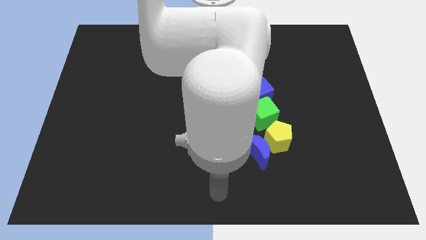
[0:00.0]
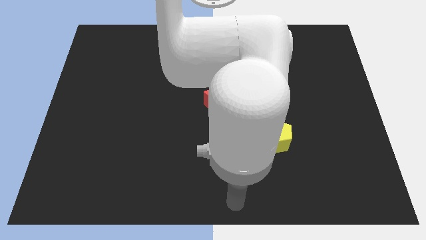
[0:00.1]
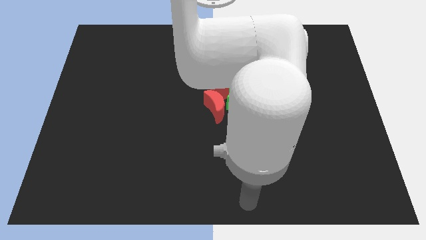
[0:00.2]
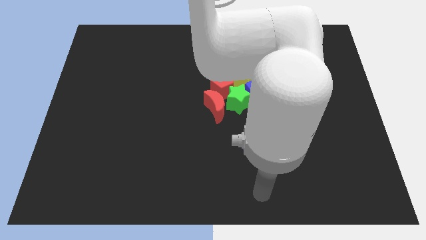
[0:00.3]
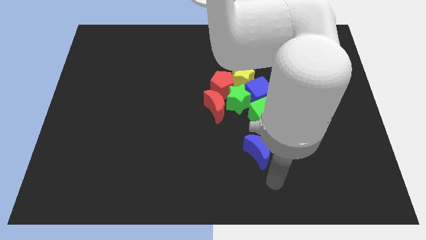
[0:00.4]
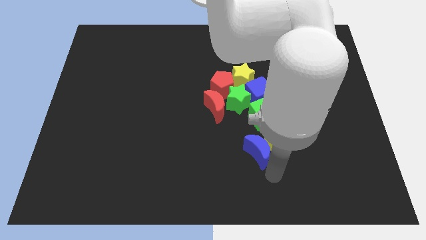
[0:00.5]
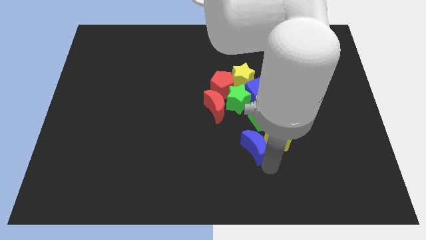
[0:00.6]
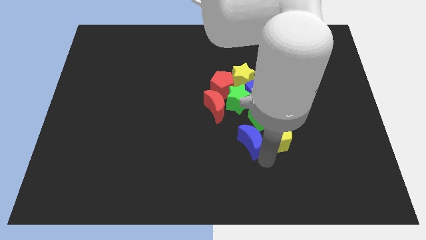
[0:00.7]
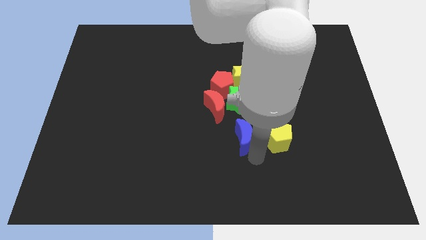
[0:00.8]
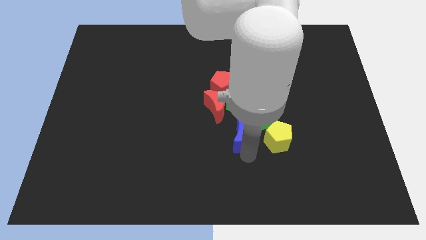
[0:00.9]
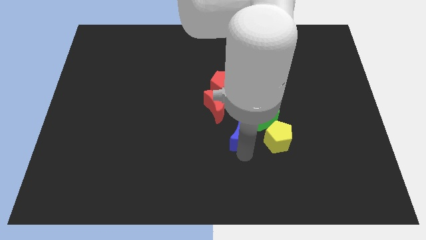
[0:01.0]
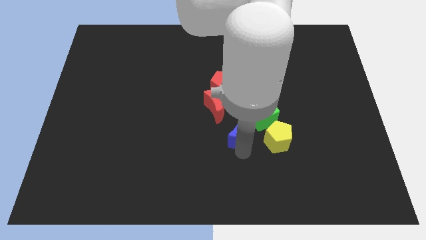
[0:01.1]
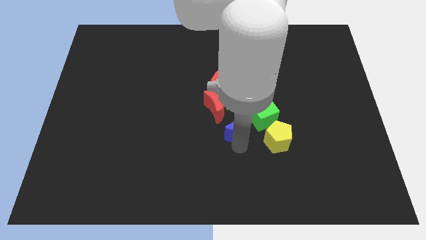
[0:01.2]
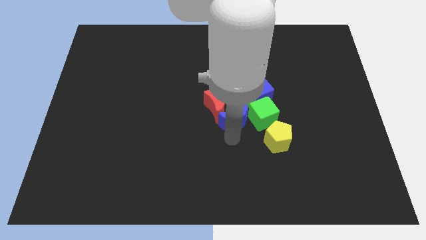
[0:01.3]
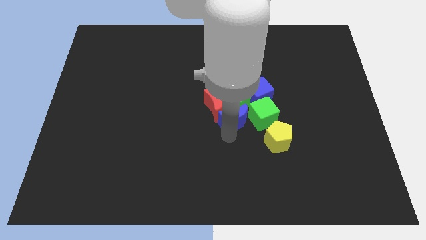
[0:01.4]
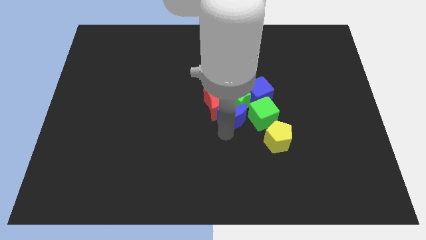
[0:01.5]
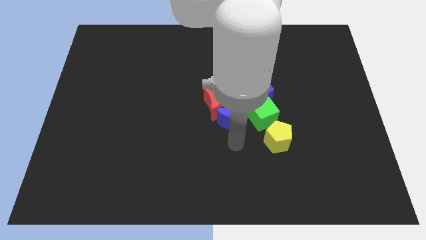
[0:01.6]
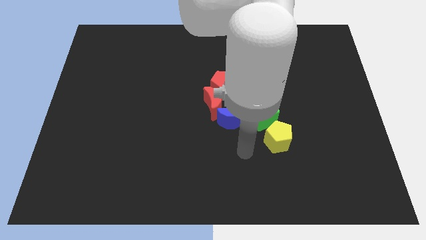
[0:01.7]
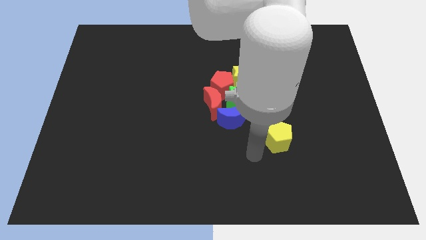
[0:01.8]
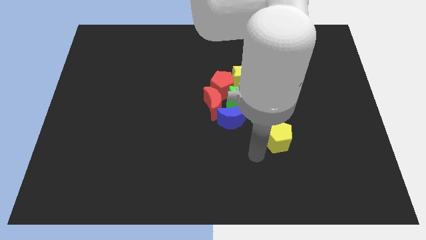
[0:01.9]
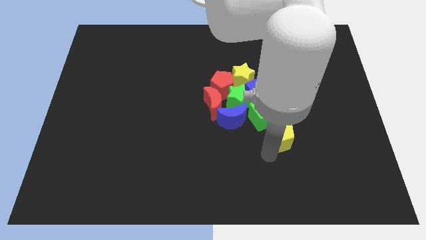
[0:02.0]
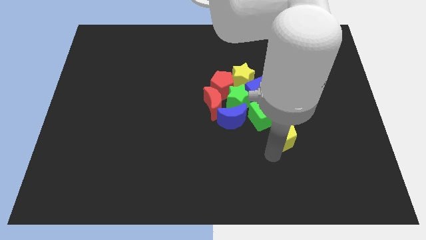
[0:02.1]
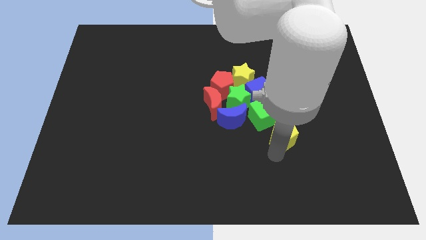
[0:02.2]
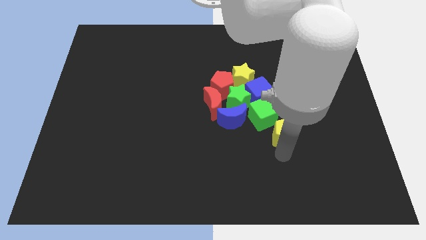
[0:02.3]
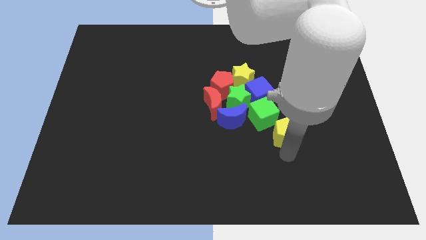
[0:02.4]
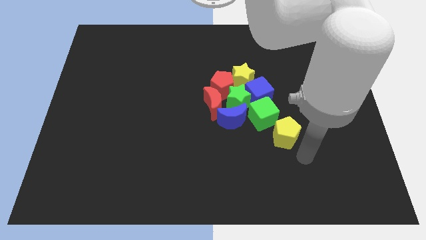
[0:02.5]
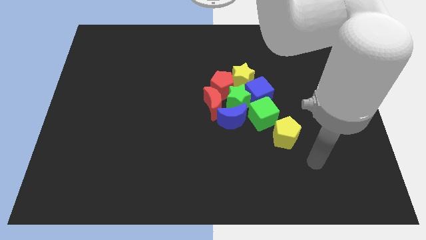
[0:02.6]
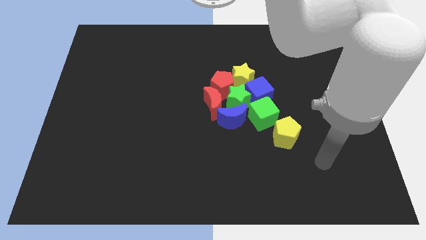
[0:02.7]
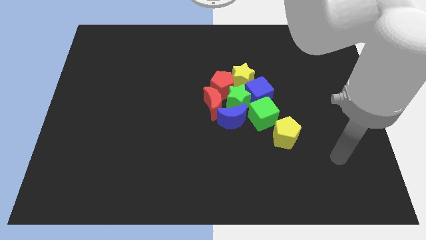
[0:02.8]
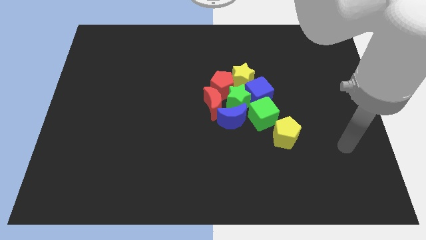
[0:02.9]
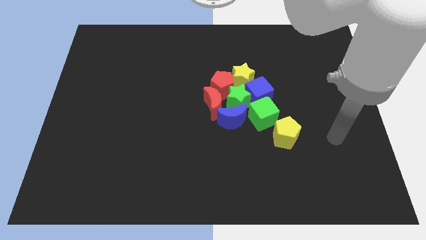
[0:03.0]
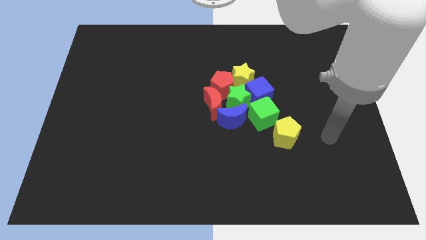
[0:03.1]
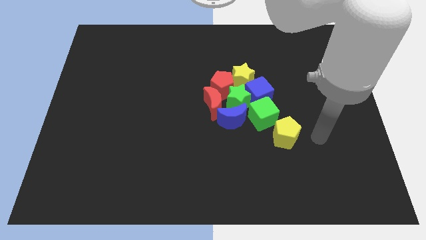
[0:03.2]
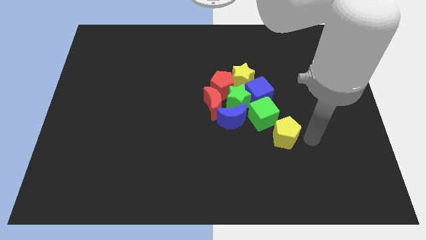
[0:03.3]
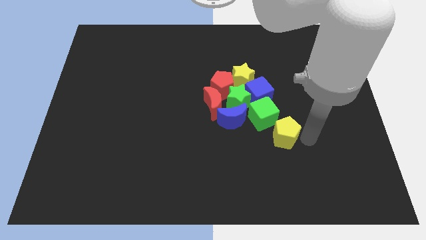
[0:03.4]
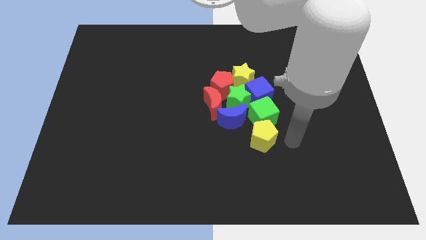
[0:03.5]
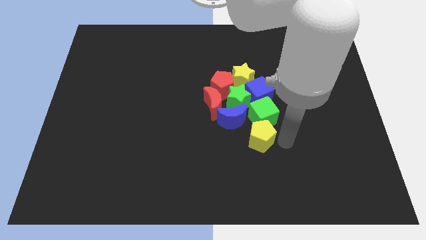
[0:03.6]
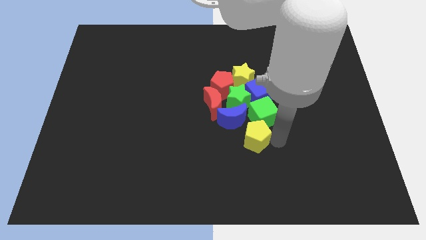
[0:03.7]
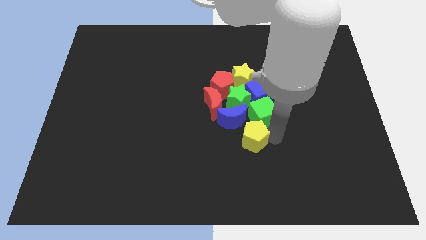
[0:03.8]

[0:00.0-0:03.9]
push the blue crescent into the red crescent

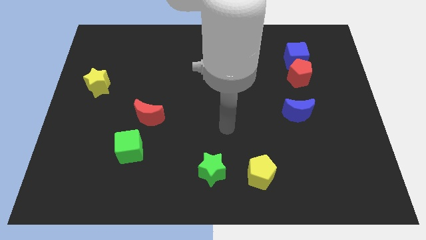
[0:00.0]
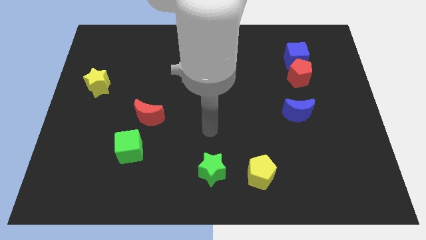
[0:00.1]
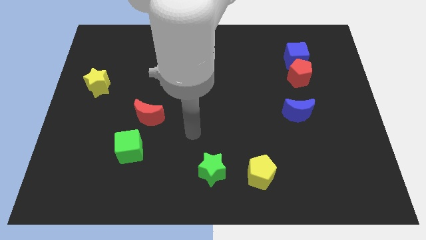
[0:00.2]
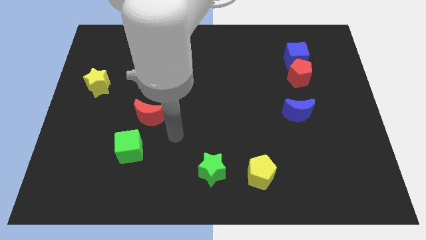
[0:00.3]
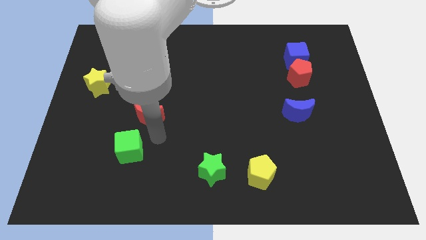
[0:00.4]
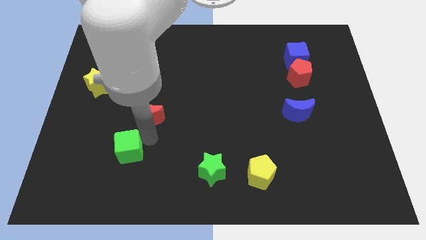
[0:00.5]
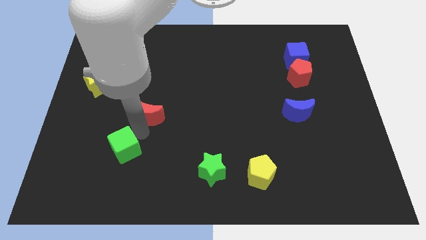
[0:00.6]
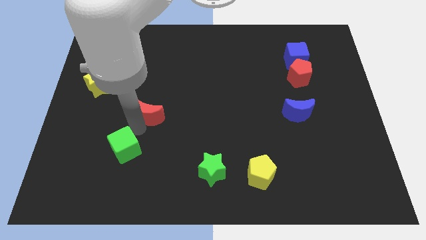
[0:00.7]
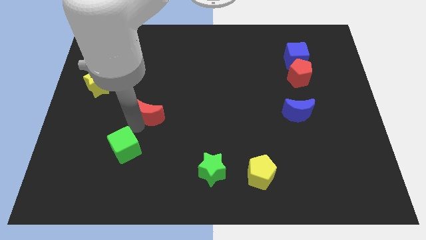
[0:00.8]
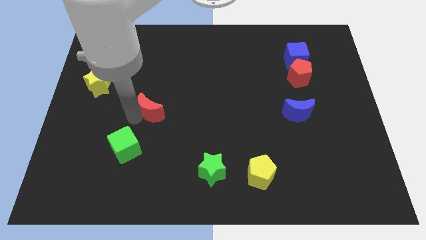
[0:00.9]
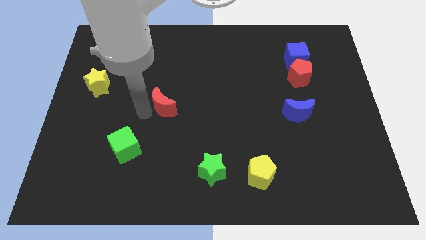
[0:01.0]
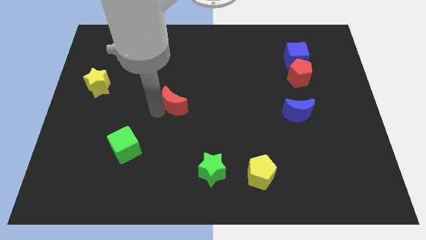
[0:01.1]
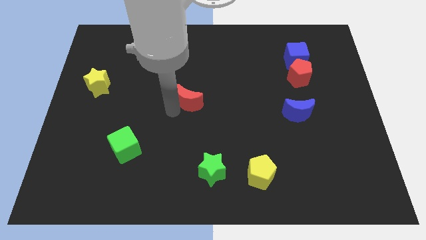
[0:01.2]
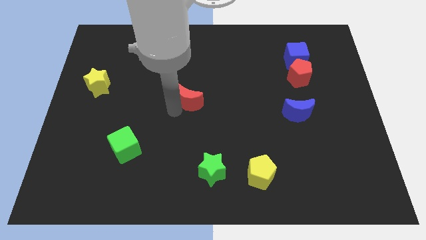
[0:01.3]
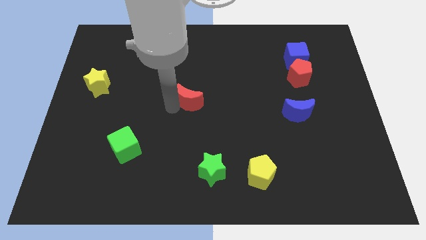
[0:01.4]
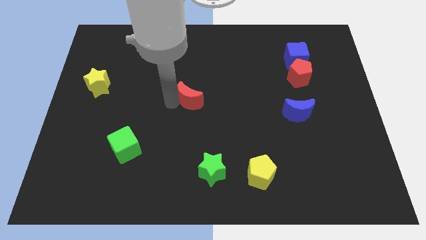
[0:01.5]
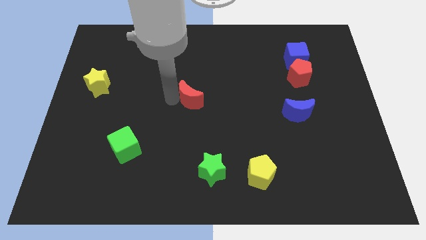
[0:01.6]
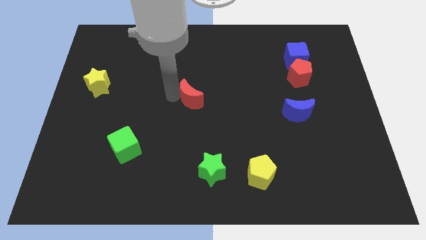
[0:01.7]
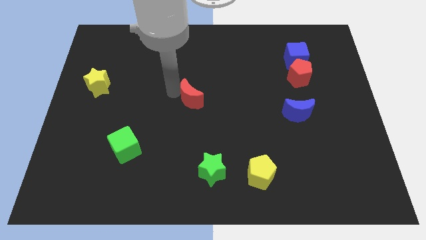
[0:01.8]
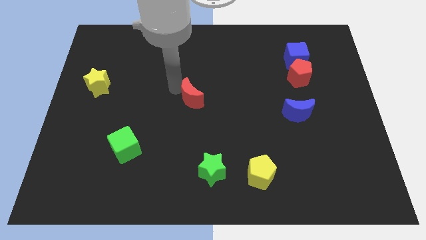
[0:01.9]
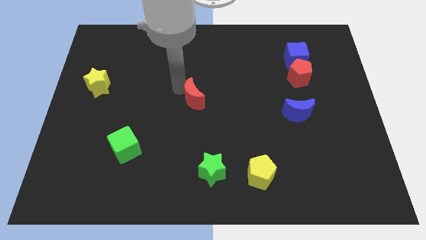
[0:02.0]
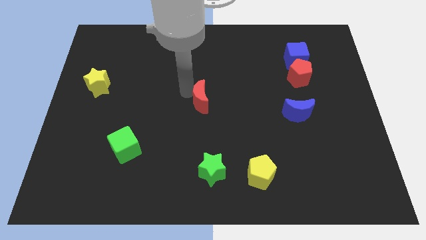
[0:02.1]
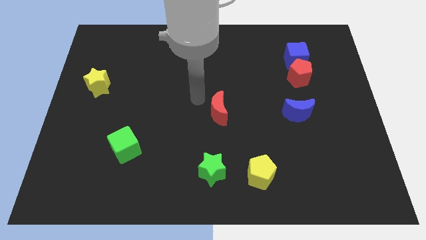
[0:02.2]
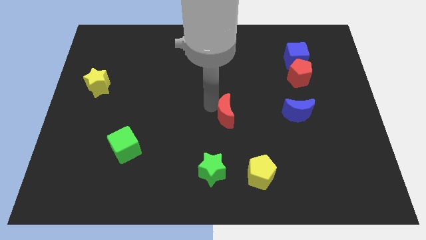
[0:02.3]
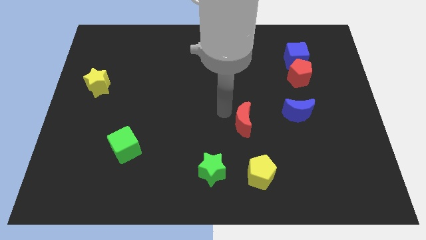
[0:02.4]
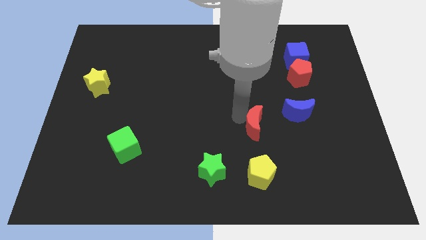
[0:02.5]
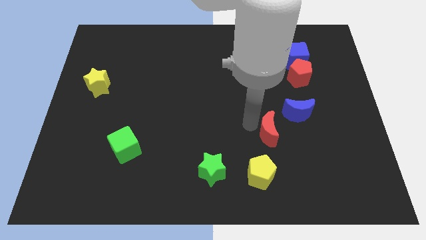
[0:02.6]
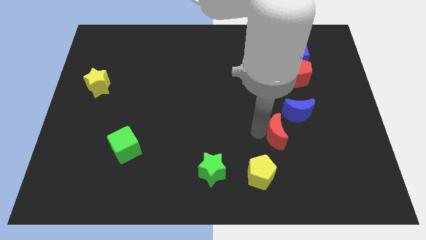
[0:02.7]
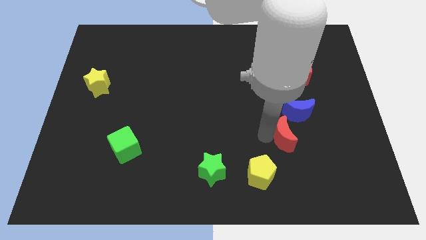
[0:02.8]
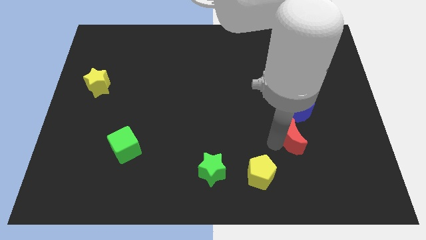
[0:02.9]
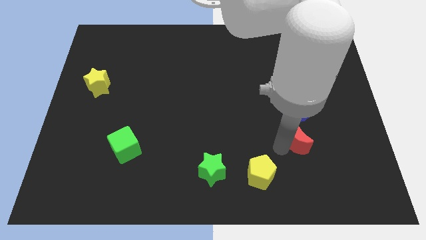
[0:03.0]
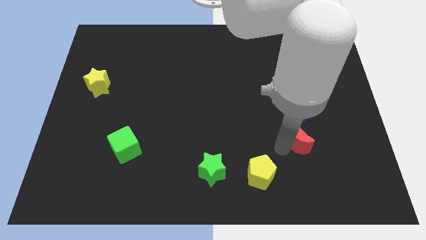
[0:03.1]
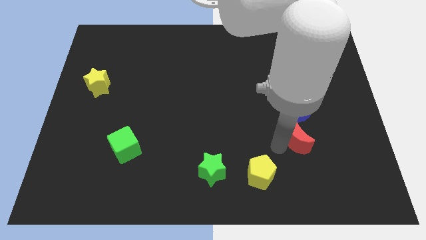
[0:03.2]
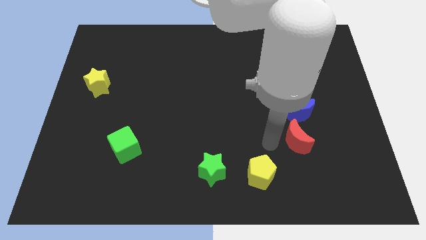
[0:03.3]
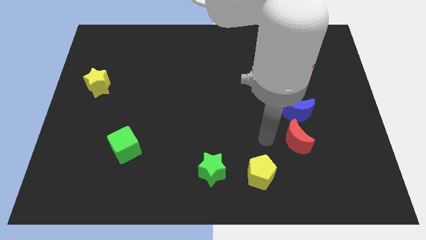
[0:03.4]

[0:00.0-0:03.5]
place the red crescent below the blue moon

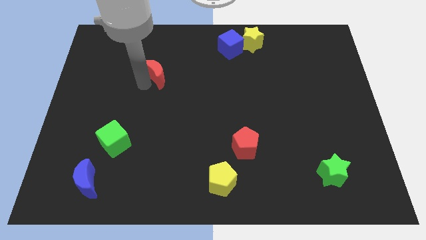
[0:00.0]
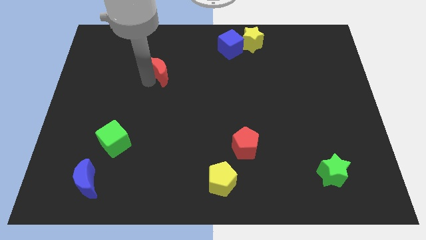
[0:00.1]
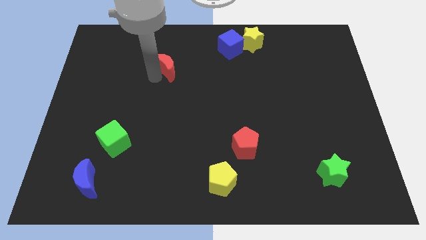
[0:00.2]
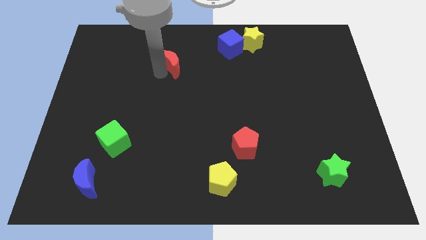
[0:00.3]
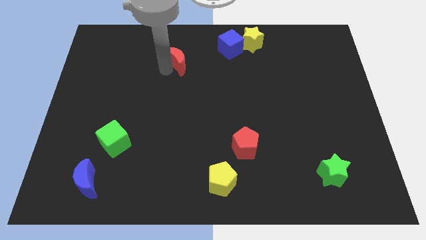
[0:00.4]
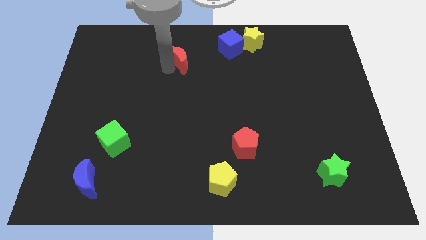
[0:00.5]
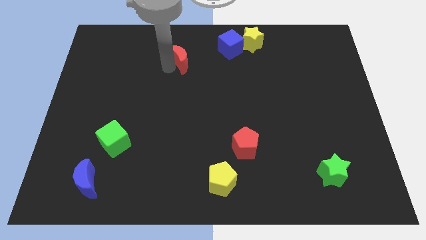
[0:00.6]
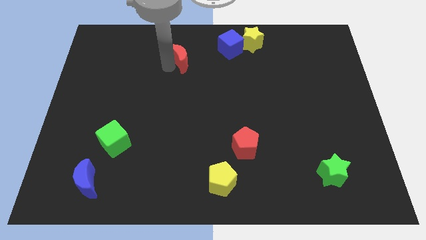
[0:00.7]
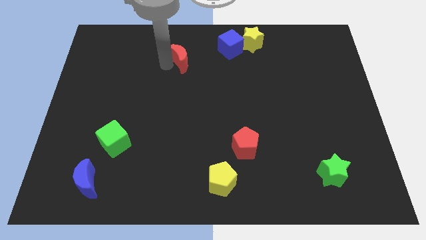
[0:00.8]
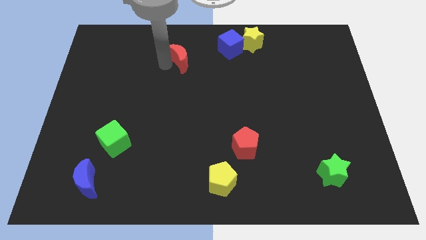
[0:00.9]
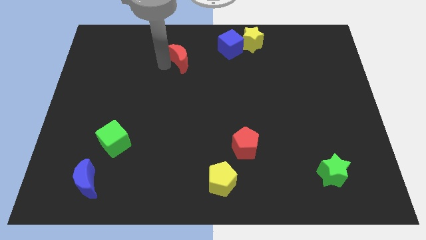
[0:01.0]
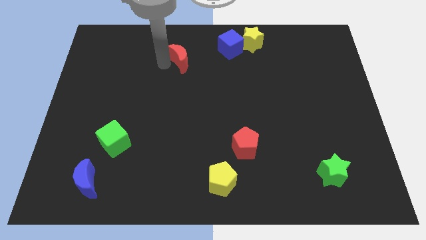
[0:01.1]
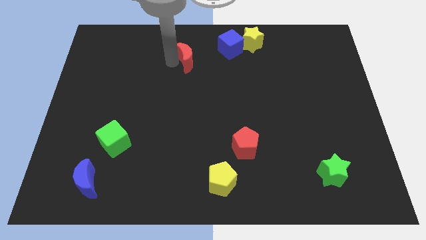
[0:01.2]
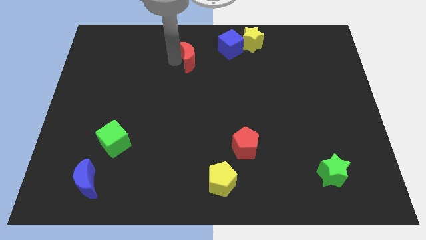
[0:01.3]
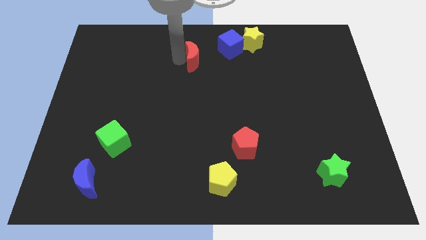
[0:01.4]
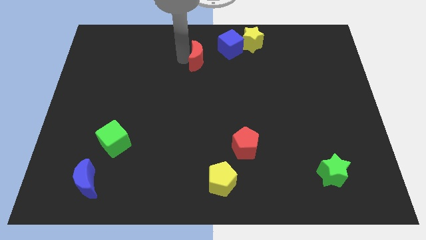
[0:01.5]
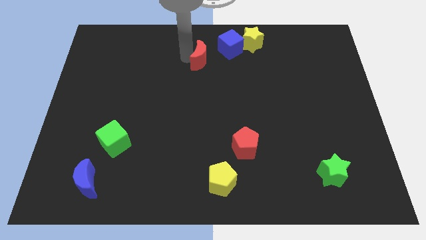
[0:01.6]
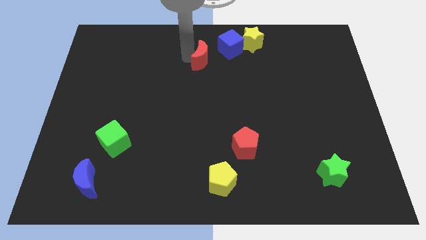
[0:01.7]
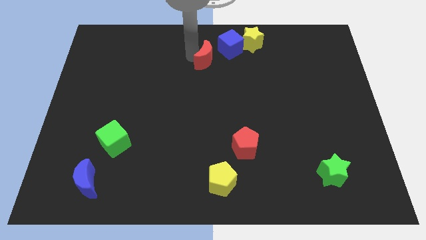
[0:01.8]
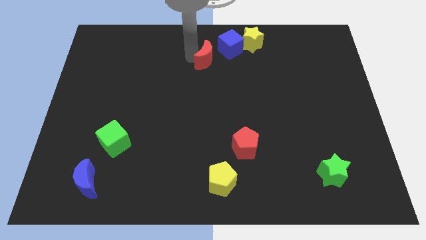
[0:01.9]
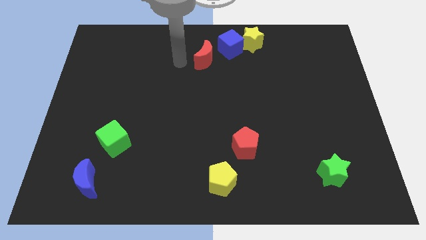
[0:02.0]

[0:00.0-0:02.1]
move the red crescent diagonal left of blue cube
